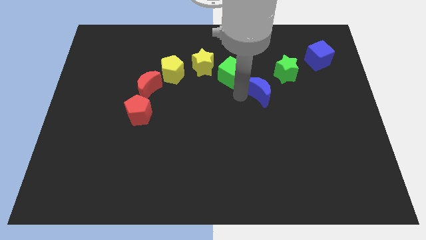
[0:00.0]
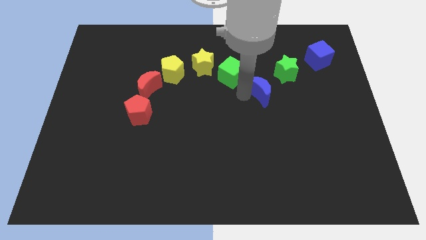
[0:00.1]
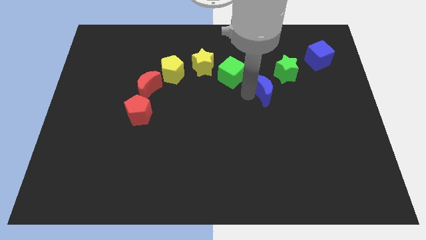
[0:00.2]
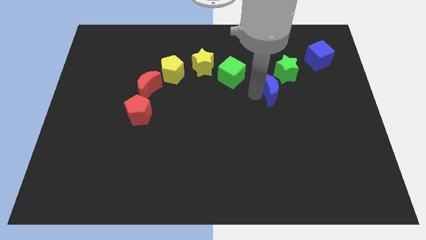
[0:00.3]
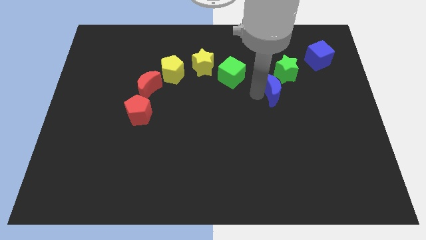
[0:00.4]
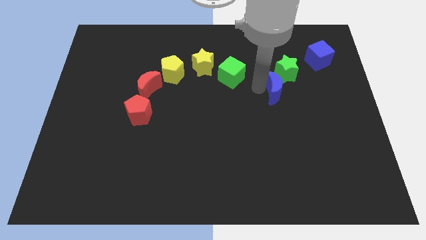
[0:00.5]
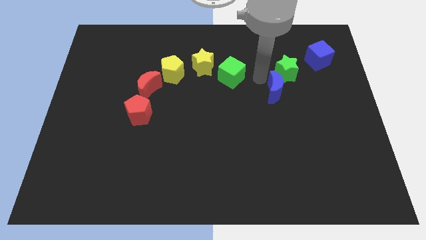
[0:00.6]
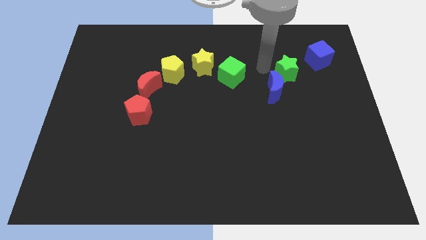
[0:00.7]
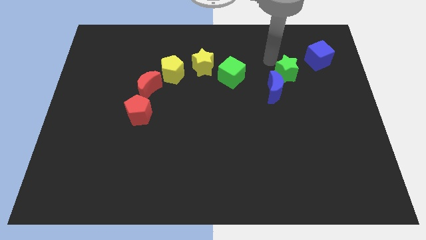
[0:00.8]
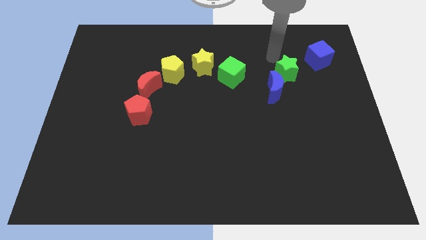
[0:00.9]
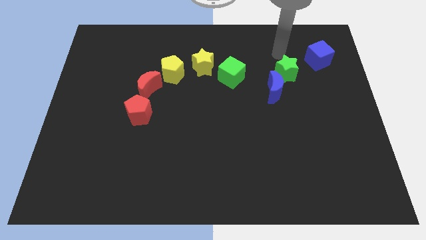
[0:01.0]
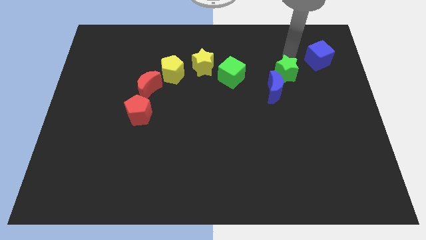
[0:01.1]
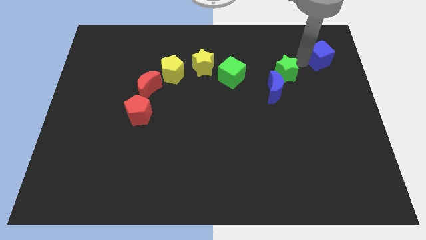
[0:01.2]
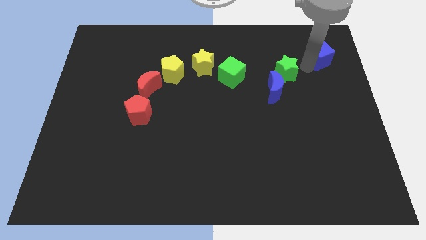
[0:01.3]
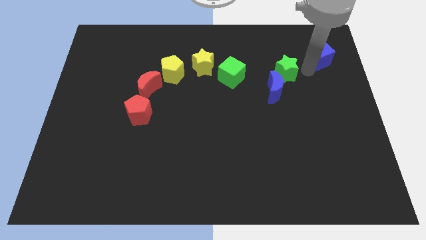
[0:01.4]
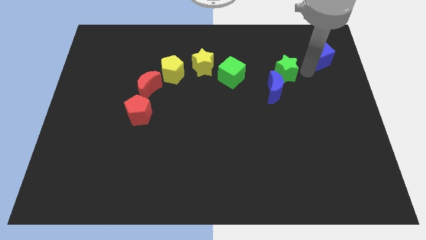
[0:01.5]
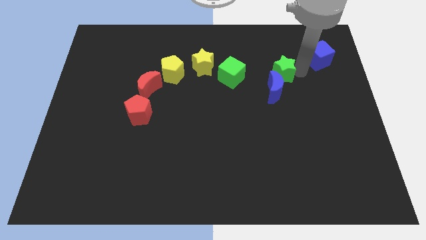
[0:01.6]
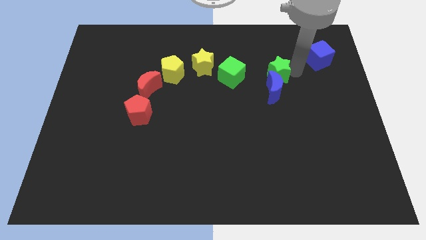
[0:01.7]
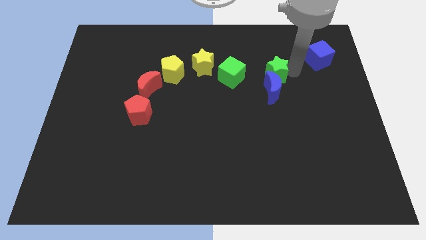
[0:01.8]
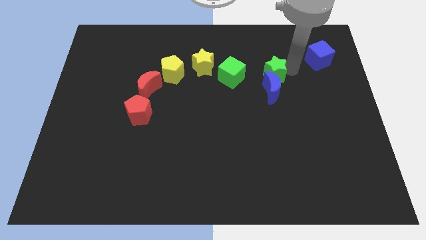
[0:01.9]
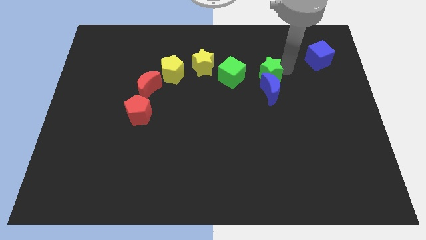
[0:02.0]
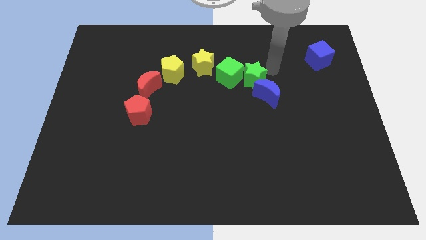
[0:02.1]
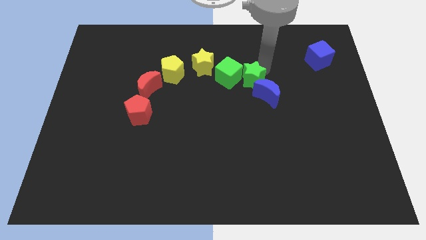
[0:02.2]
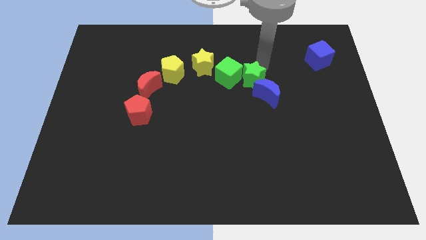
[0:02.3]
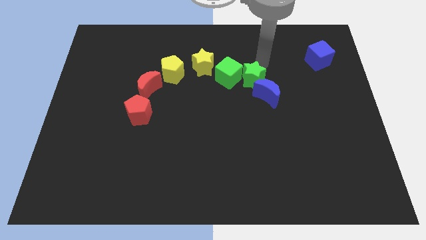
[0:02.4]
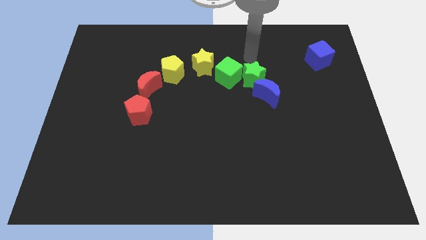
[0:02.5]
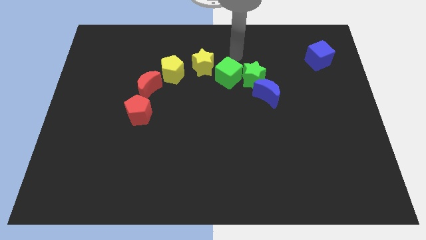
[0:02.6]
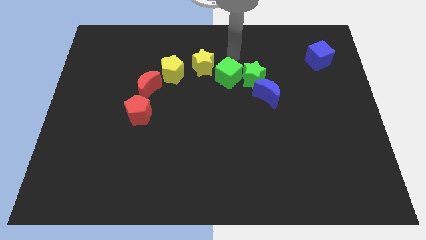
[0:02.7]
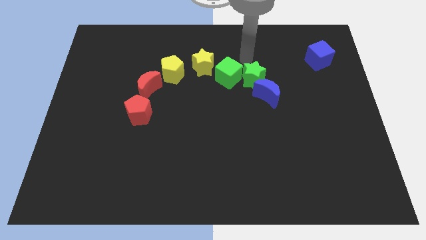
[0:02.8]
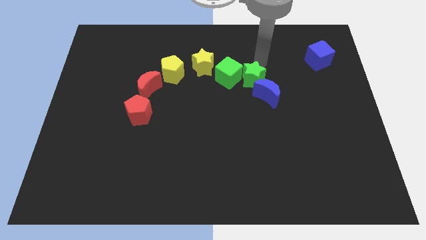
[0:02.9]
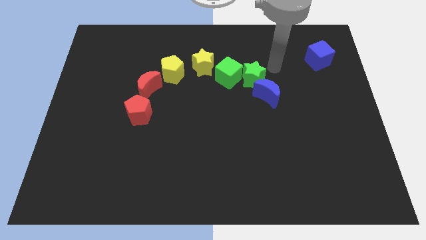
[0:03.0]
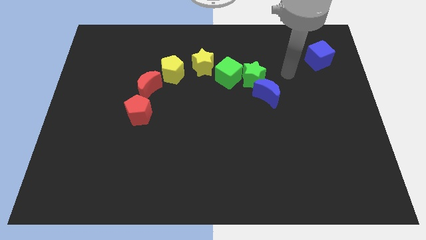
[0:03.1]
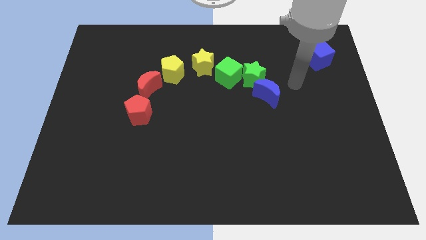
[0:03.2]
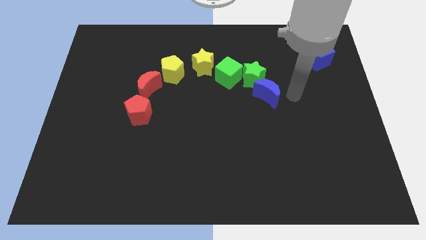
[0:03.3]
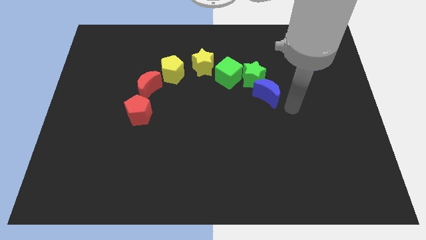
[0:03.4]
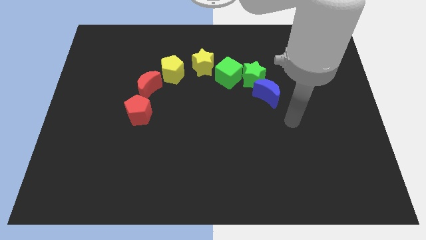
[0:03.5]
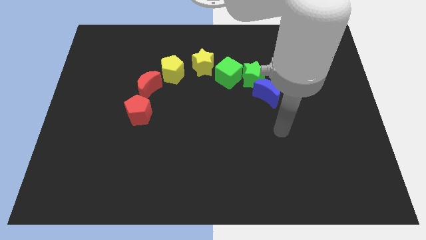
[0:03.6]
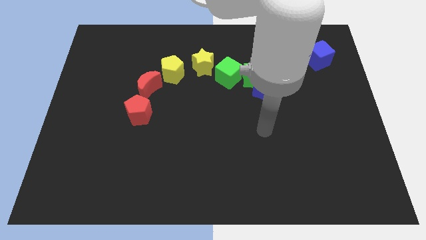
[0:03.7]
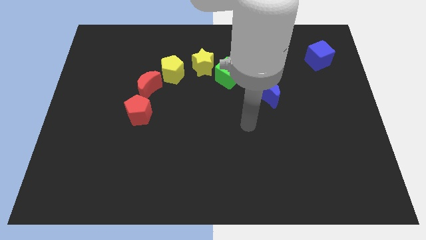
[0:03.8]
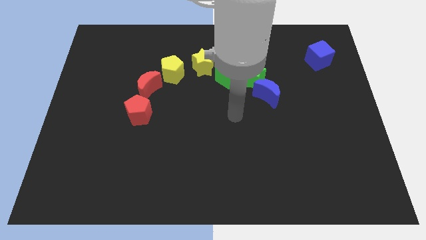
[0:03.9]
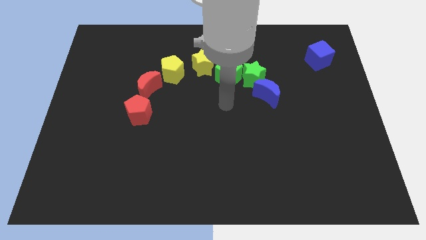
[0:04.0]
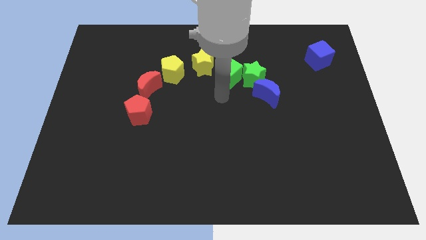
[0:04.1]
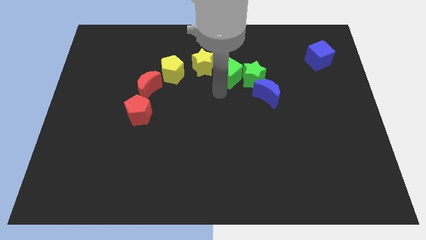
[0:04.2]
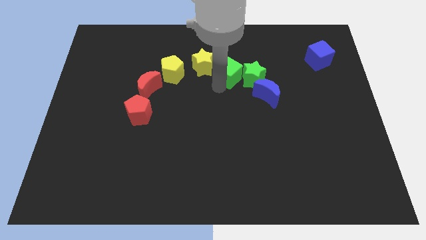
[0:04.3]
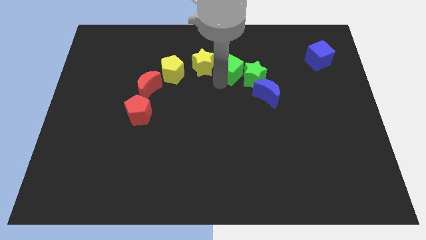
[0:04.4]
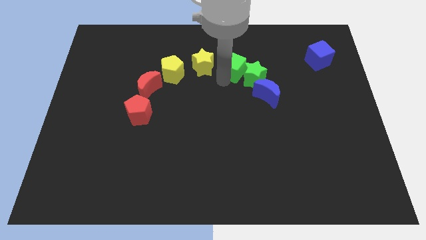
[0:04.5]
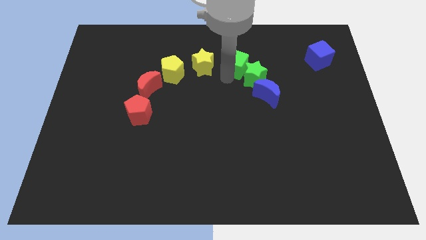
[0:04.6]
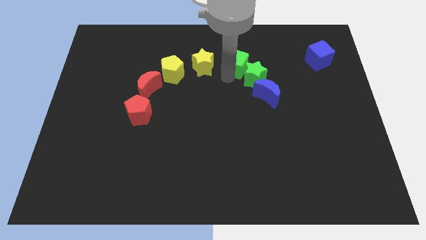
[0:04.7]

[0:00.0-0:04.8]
make a diagonal line with the green blocks and blue crescent

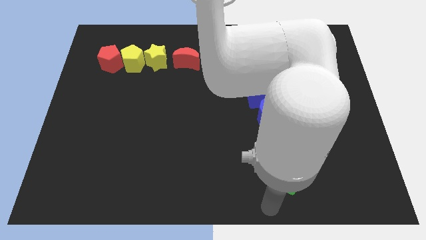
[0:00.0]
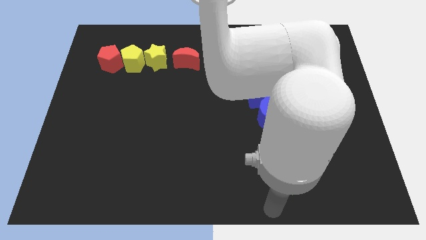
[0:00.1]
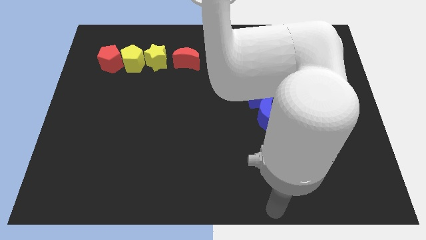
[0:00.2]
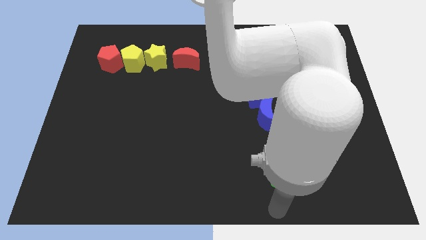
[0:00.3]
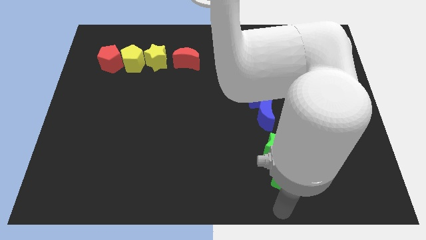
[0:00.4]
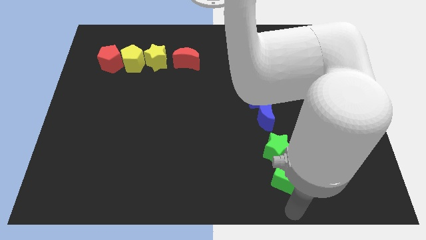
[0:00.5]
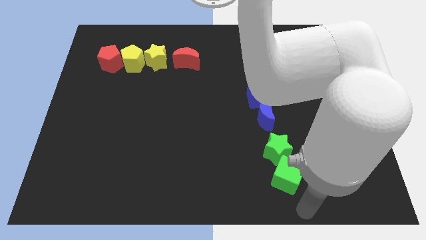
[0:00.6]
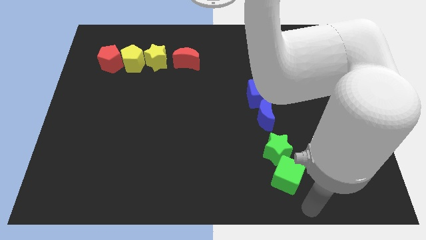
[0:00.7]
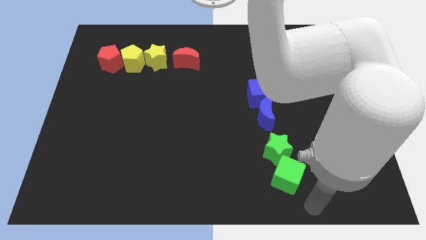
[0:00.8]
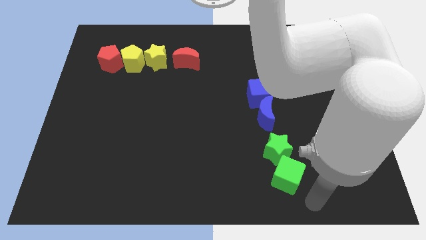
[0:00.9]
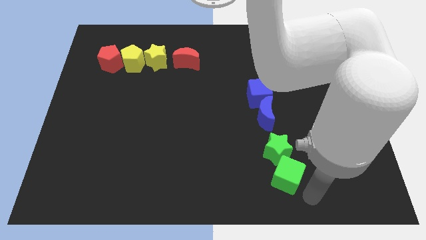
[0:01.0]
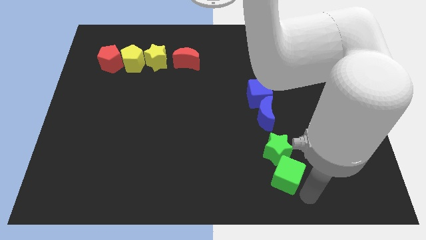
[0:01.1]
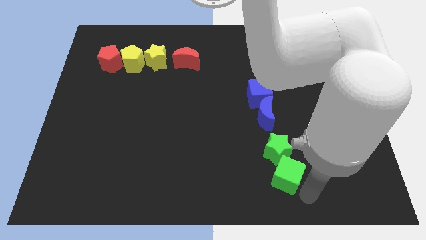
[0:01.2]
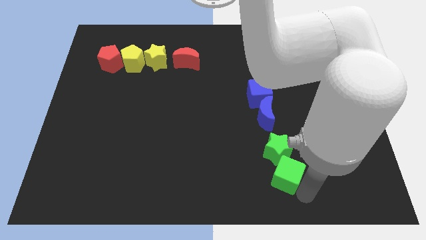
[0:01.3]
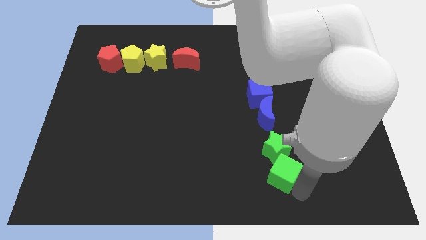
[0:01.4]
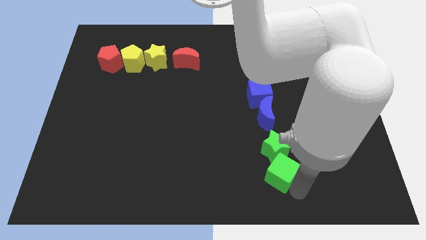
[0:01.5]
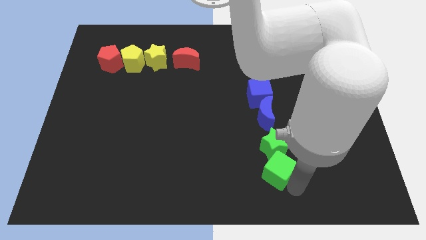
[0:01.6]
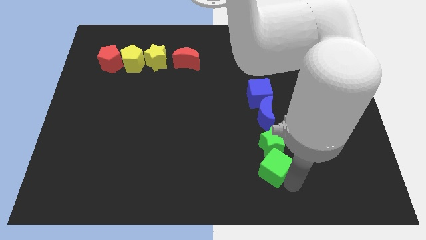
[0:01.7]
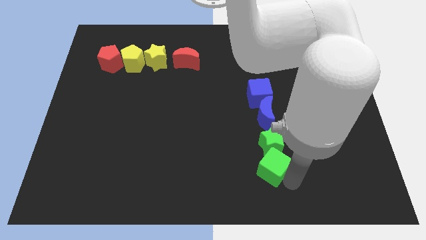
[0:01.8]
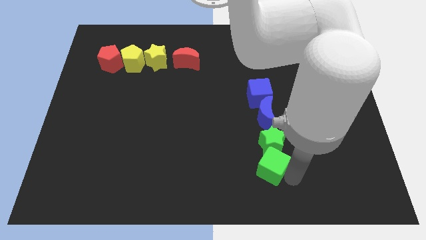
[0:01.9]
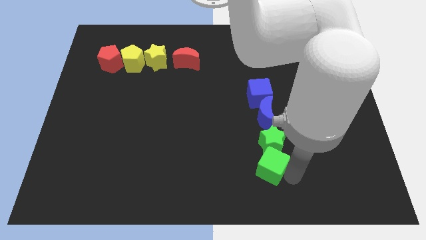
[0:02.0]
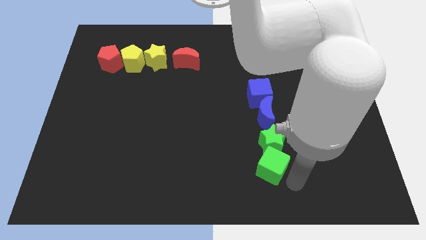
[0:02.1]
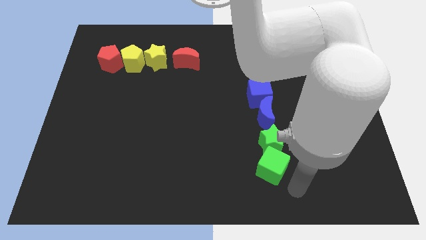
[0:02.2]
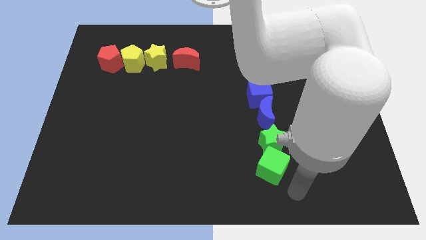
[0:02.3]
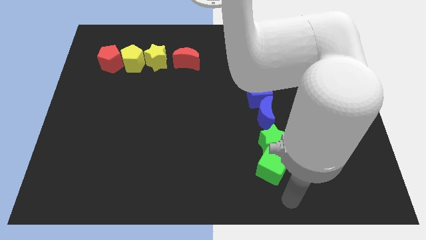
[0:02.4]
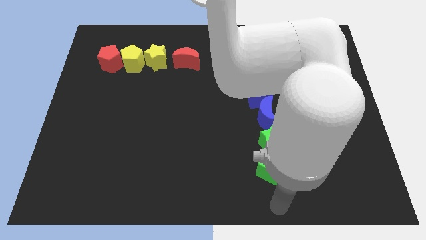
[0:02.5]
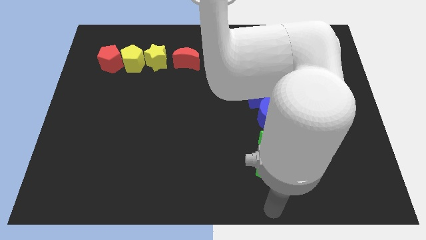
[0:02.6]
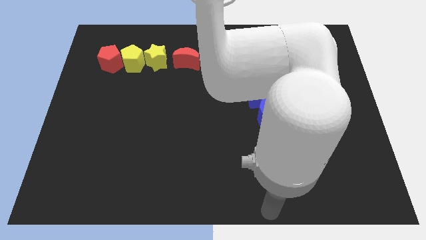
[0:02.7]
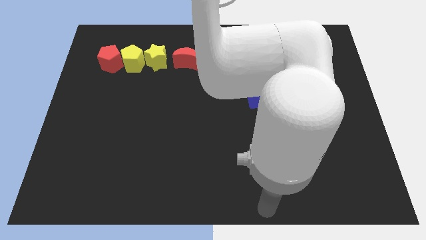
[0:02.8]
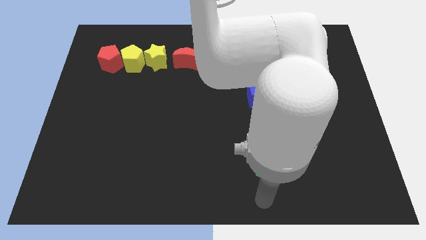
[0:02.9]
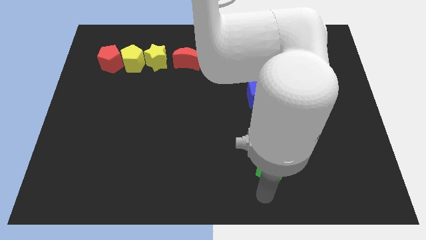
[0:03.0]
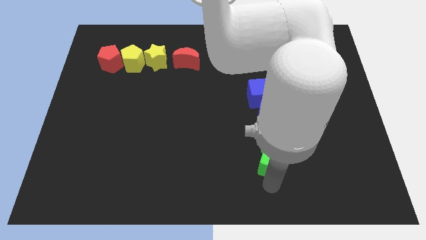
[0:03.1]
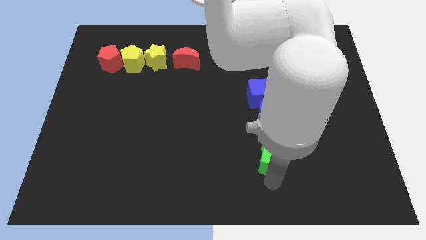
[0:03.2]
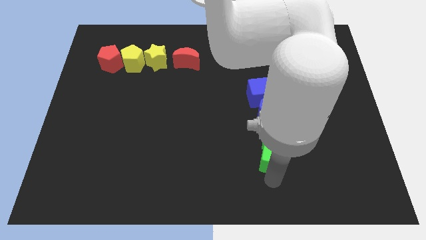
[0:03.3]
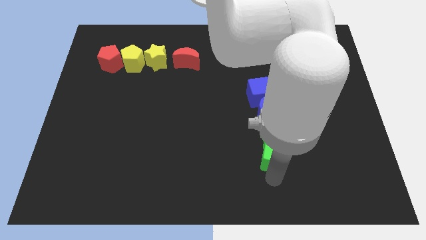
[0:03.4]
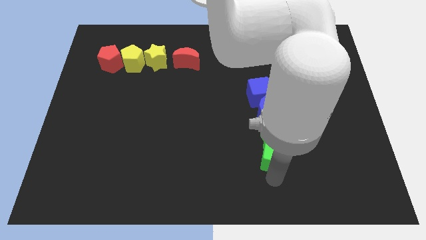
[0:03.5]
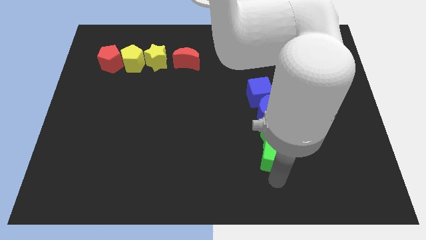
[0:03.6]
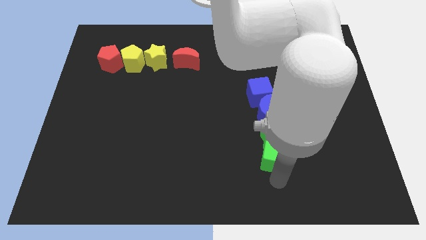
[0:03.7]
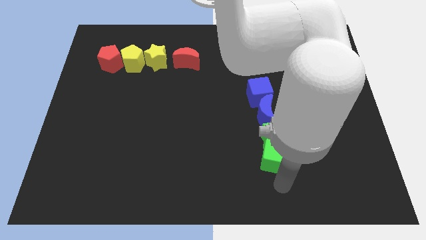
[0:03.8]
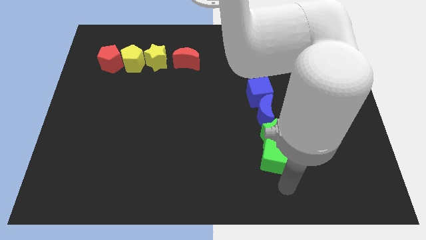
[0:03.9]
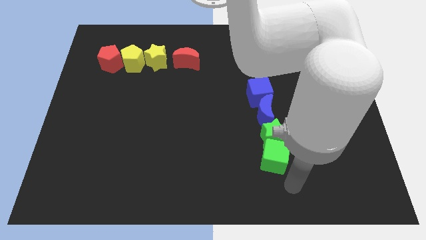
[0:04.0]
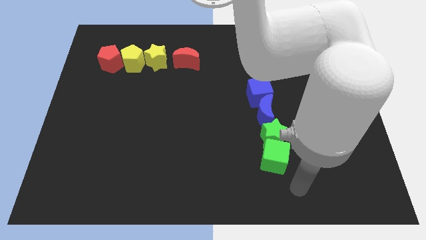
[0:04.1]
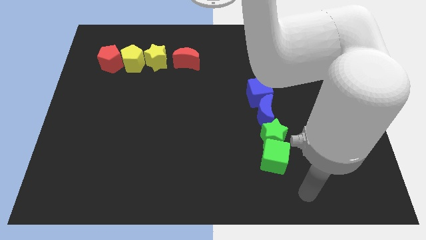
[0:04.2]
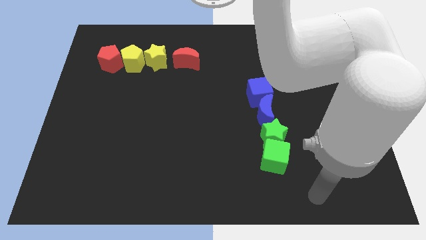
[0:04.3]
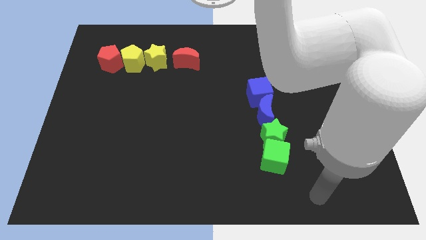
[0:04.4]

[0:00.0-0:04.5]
move green blocks into blue blocks
